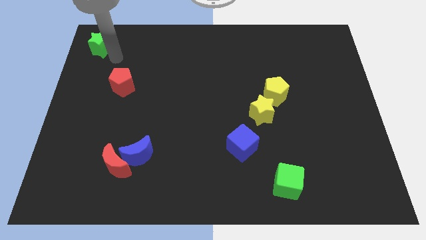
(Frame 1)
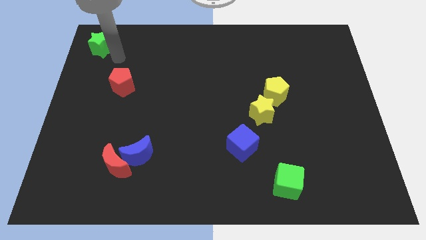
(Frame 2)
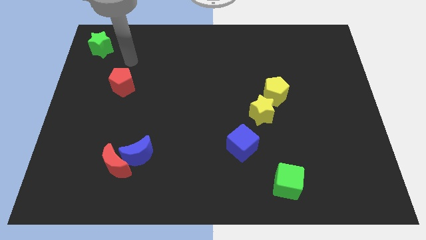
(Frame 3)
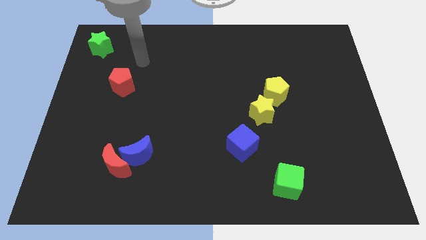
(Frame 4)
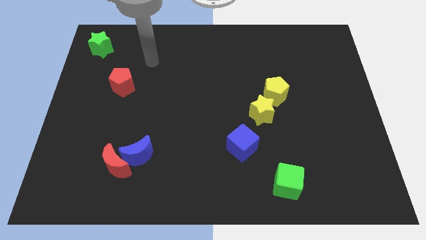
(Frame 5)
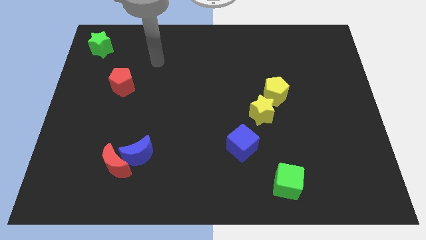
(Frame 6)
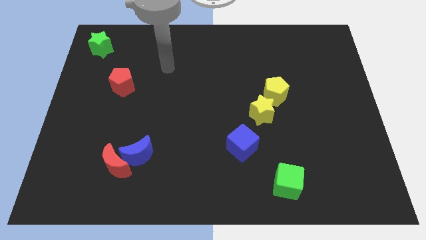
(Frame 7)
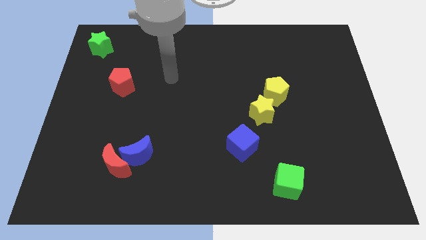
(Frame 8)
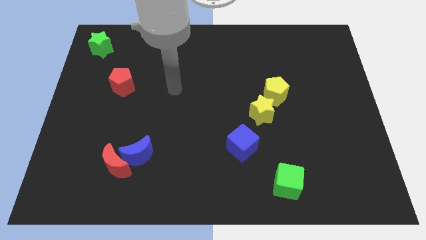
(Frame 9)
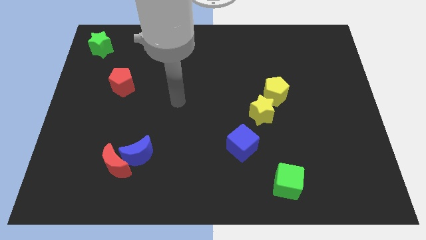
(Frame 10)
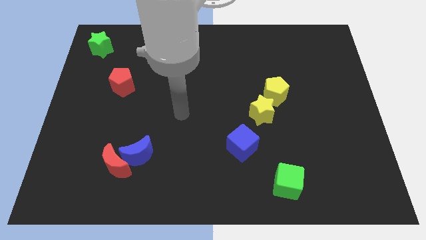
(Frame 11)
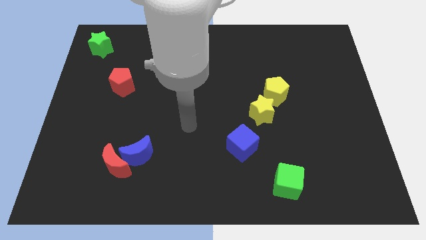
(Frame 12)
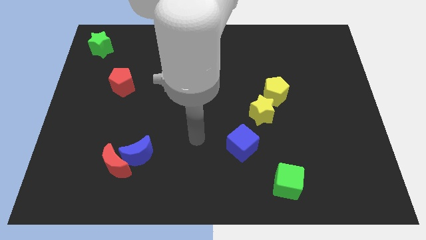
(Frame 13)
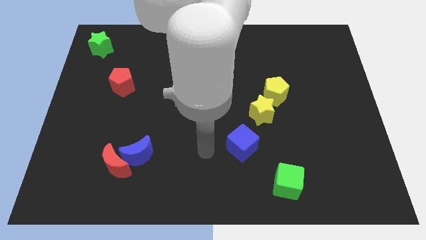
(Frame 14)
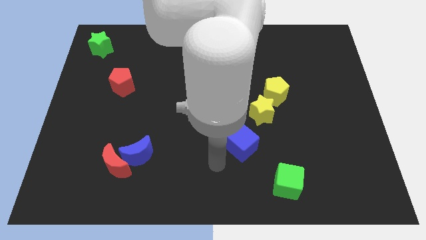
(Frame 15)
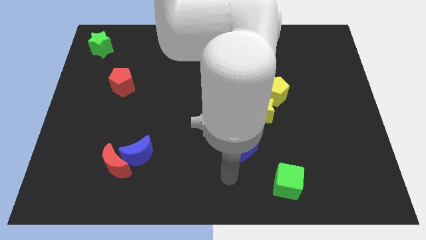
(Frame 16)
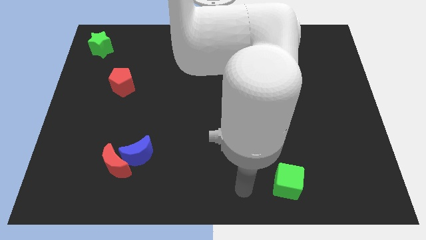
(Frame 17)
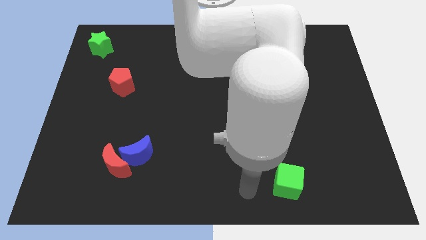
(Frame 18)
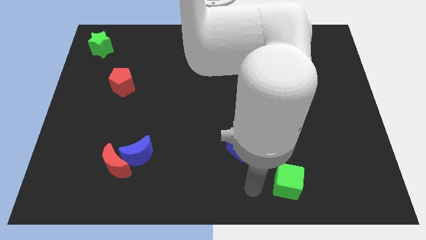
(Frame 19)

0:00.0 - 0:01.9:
move your hand away from the green star

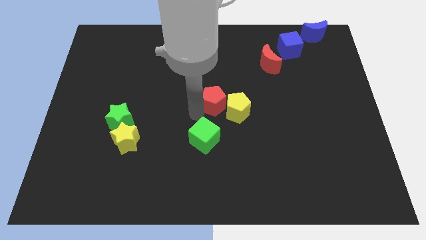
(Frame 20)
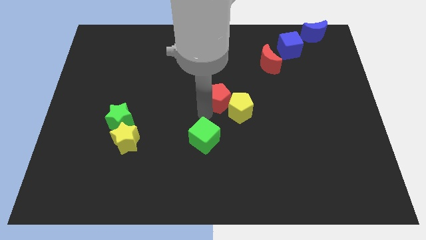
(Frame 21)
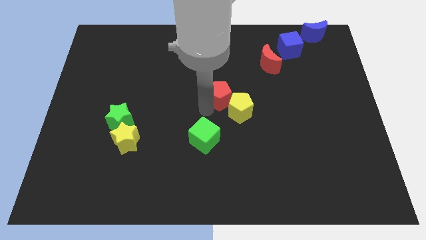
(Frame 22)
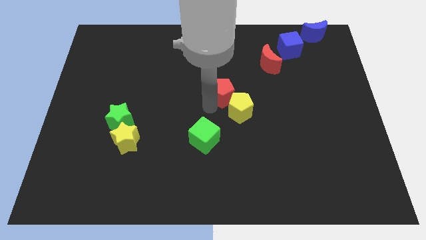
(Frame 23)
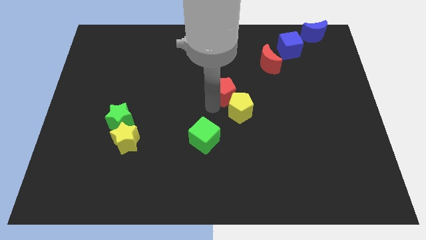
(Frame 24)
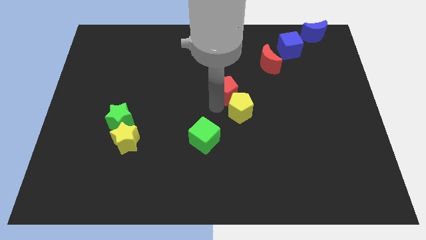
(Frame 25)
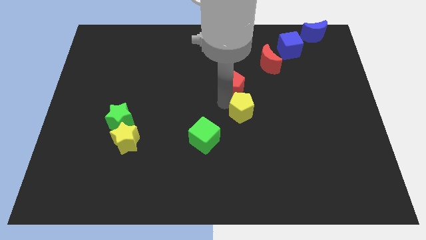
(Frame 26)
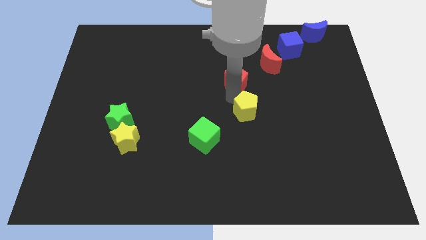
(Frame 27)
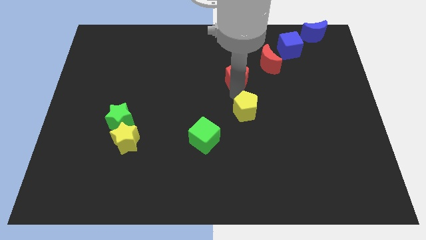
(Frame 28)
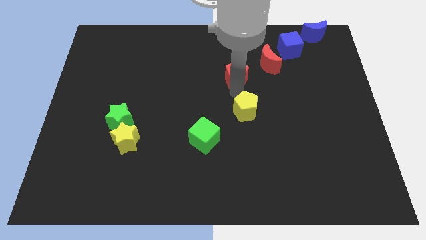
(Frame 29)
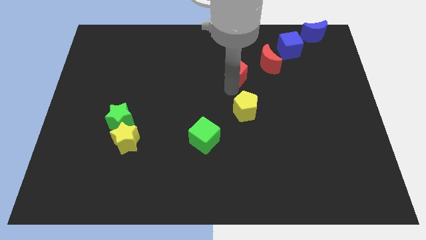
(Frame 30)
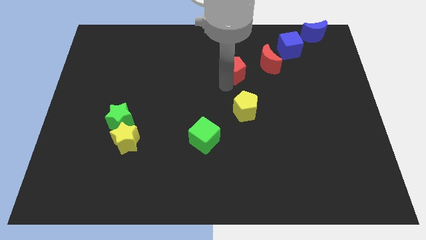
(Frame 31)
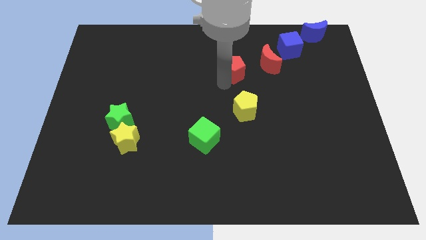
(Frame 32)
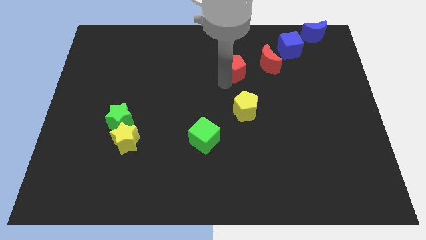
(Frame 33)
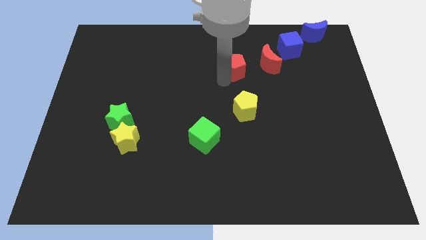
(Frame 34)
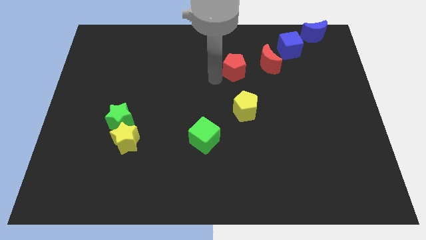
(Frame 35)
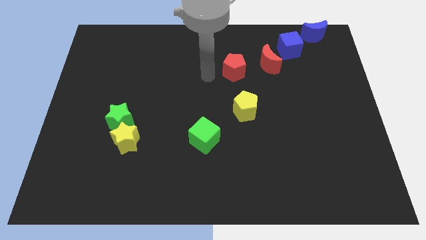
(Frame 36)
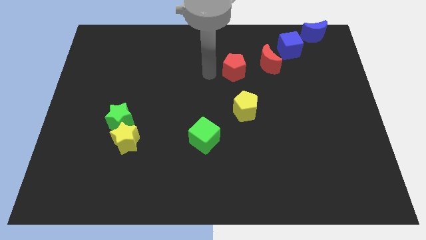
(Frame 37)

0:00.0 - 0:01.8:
separate the red pentagon from yellow pentagon

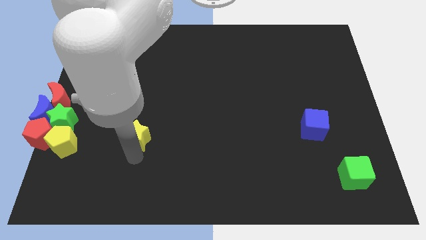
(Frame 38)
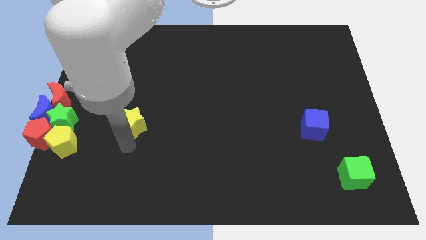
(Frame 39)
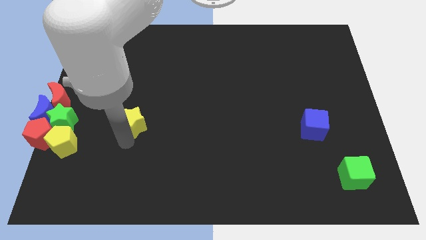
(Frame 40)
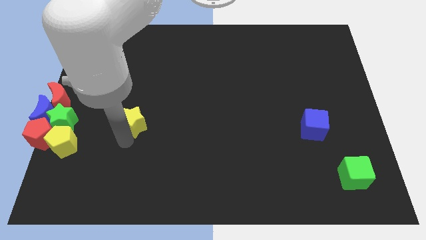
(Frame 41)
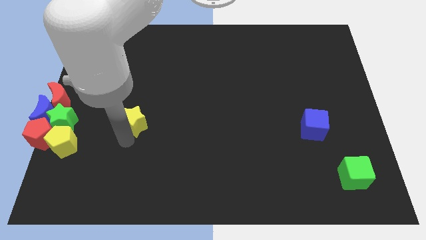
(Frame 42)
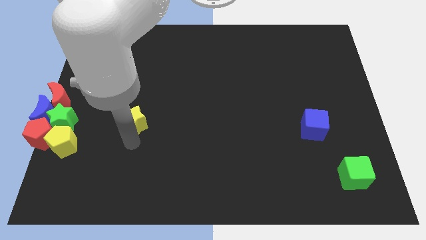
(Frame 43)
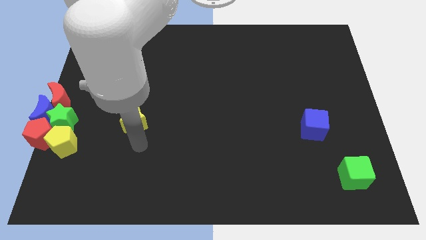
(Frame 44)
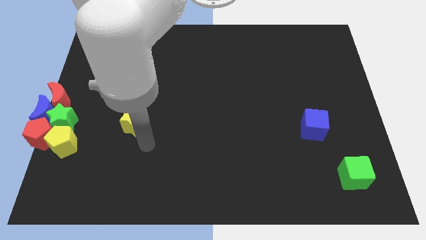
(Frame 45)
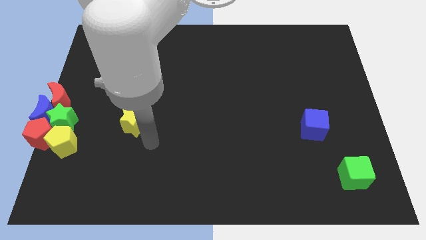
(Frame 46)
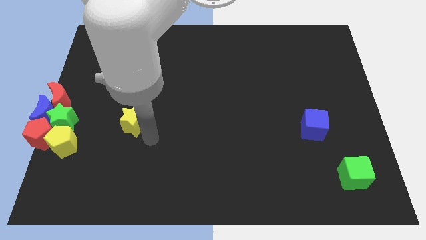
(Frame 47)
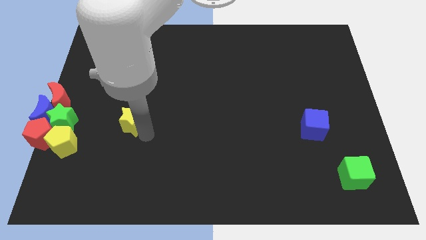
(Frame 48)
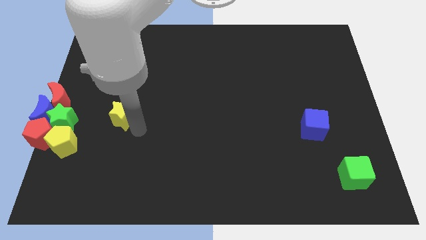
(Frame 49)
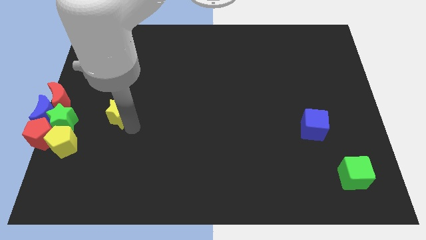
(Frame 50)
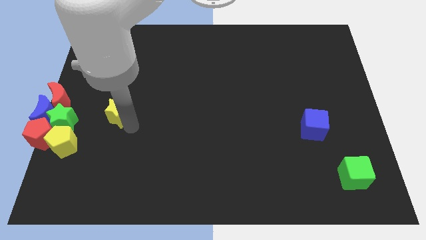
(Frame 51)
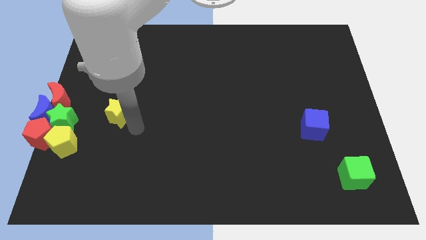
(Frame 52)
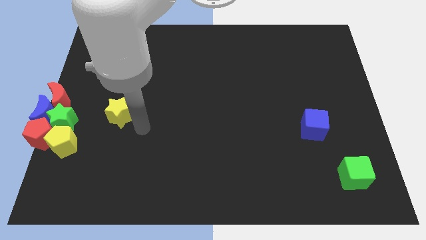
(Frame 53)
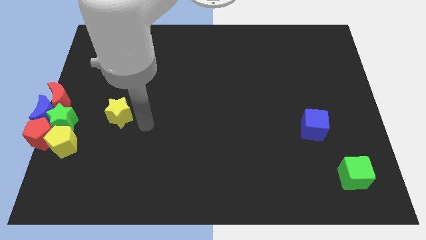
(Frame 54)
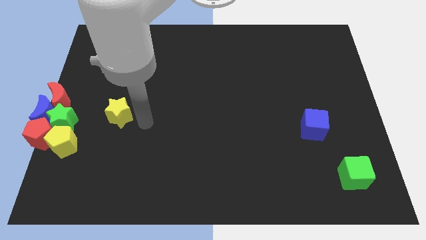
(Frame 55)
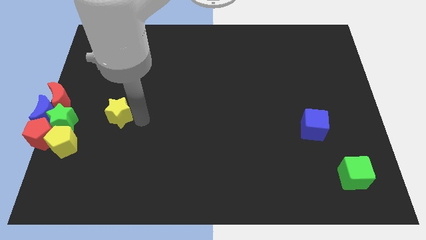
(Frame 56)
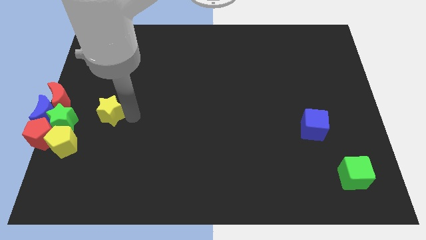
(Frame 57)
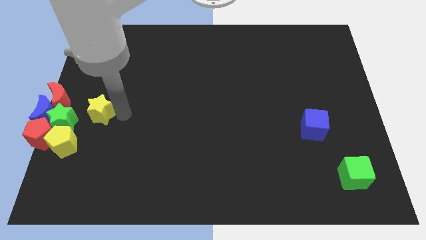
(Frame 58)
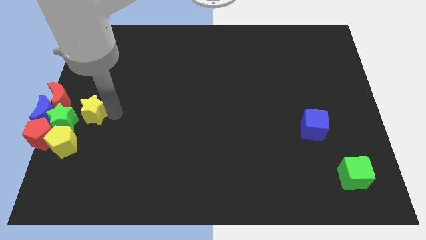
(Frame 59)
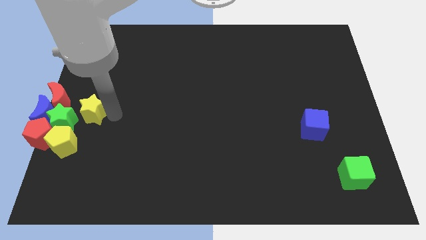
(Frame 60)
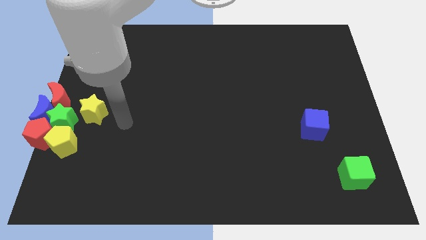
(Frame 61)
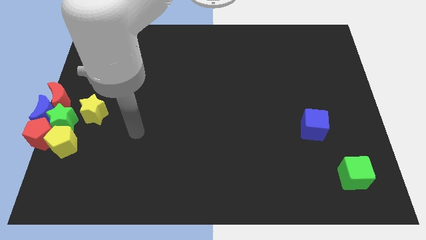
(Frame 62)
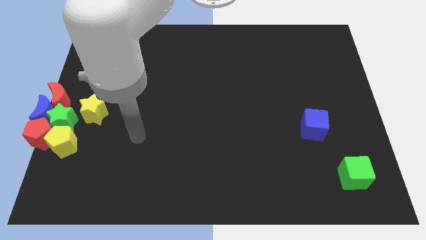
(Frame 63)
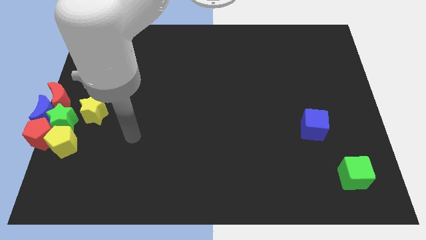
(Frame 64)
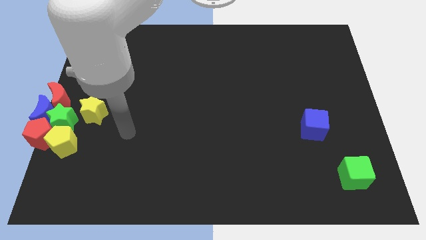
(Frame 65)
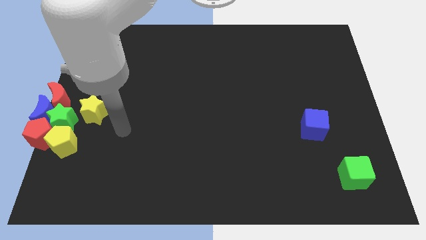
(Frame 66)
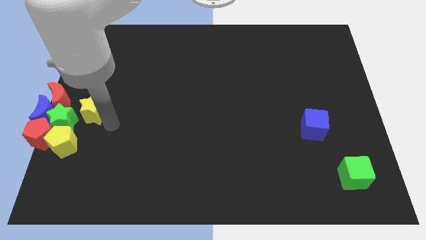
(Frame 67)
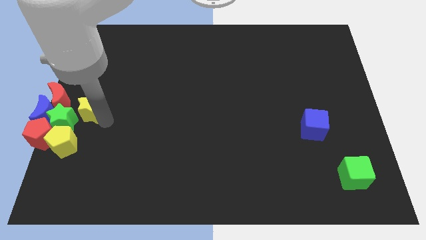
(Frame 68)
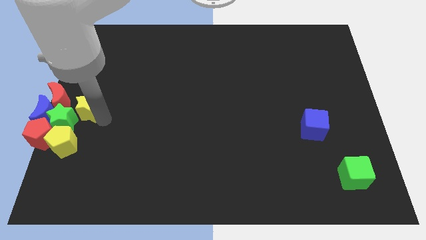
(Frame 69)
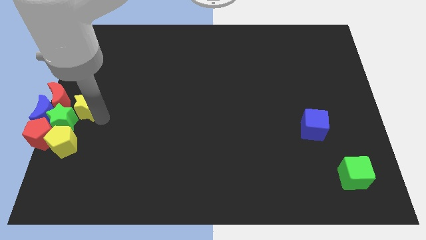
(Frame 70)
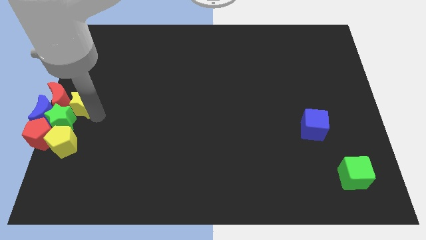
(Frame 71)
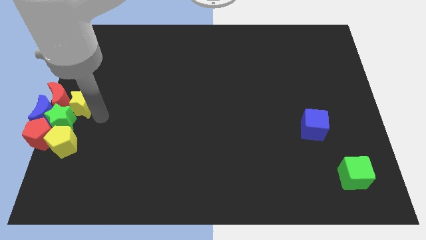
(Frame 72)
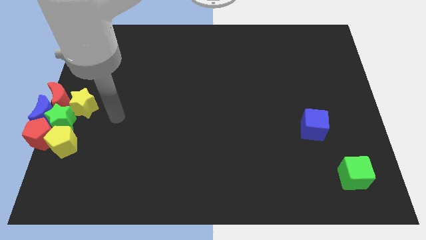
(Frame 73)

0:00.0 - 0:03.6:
slide yellow star to the top right of the green star

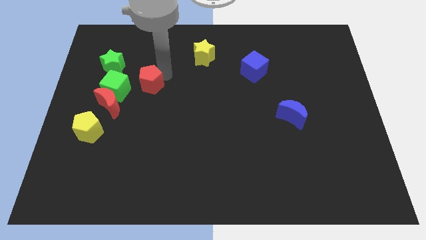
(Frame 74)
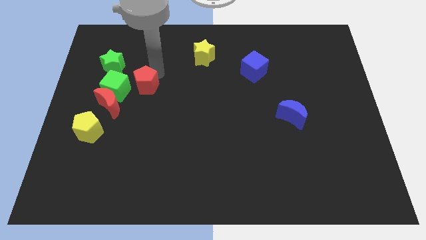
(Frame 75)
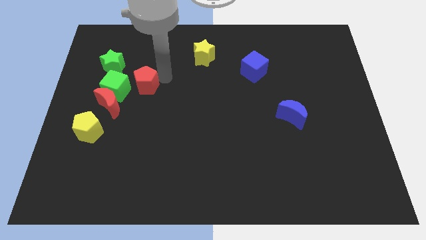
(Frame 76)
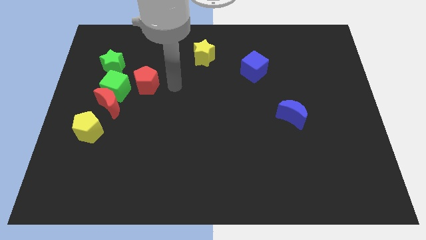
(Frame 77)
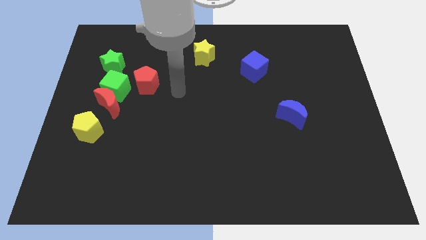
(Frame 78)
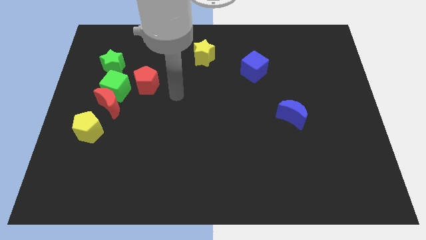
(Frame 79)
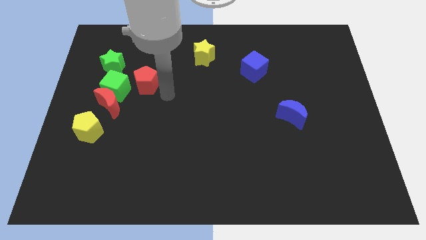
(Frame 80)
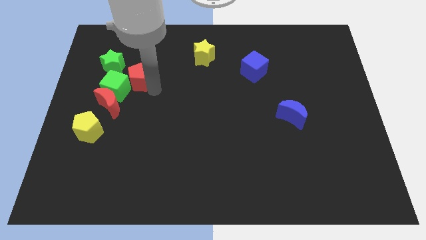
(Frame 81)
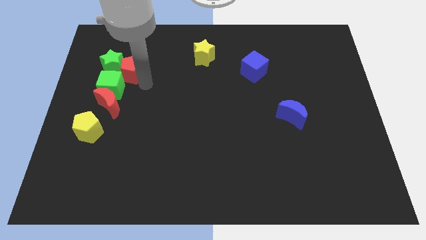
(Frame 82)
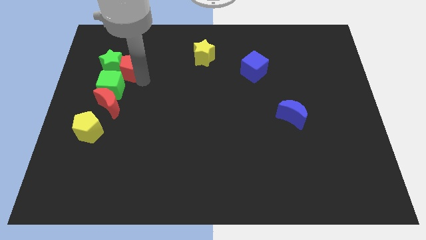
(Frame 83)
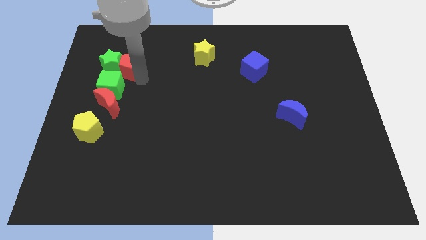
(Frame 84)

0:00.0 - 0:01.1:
move red pentagon close to green star

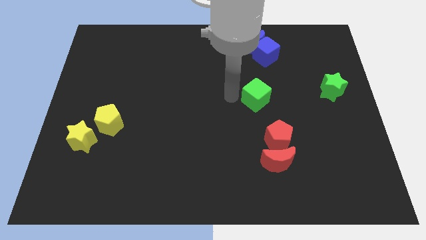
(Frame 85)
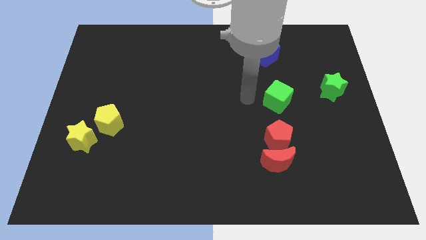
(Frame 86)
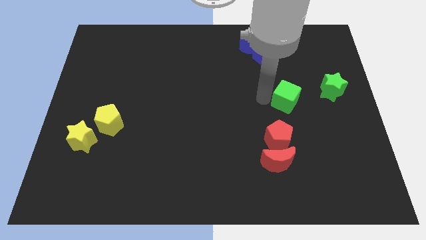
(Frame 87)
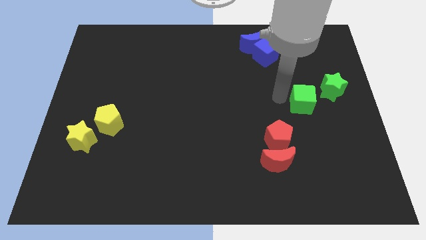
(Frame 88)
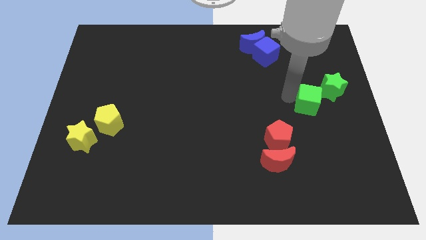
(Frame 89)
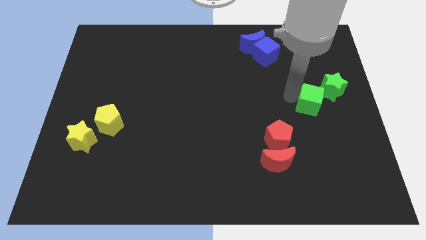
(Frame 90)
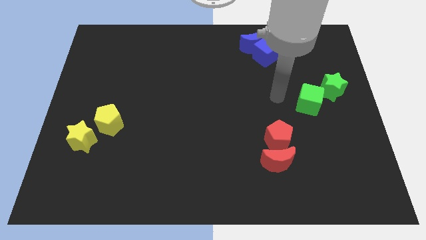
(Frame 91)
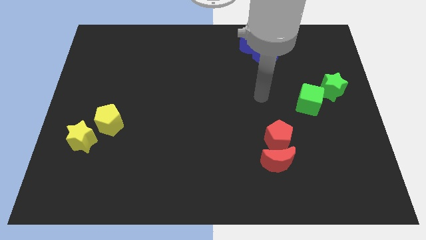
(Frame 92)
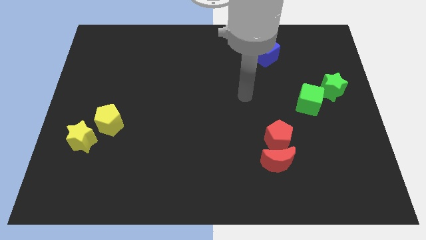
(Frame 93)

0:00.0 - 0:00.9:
place the green cube to the left bottom of the green star
